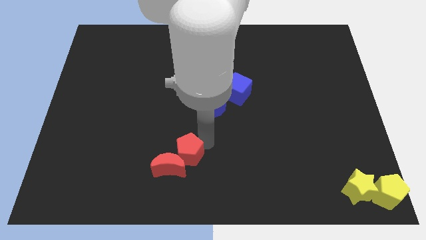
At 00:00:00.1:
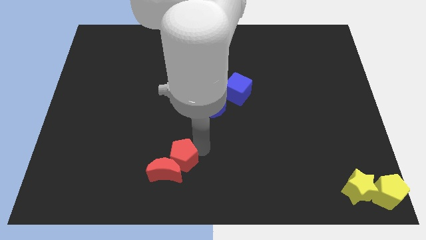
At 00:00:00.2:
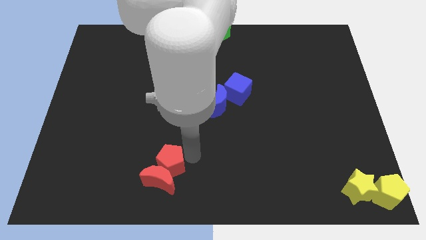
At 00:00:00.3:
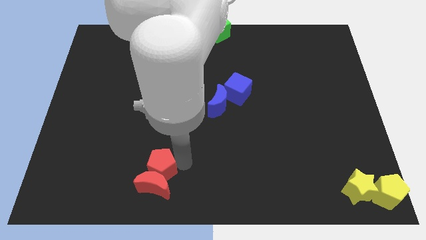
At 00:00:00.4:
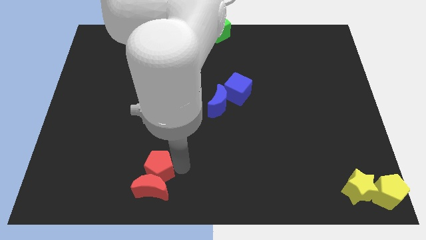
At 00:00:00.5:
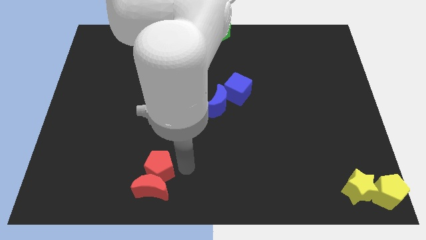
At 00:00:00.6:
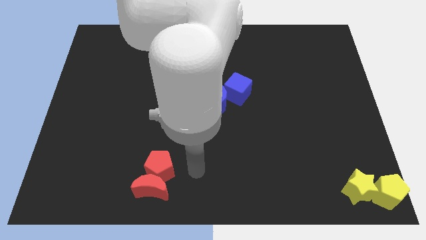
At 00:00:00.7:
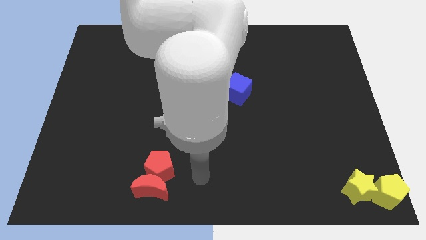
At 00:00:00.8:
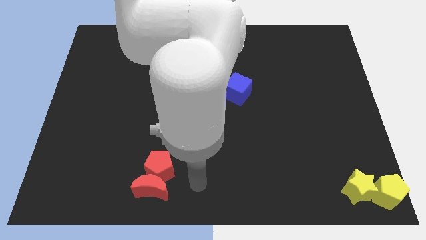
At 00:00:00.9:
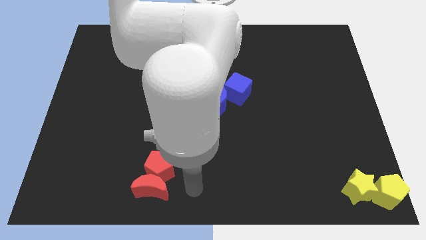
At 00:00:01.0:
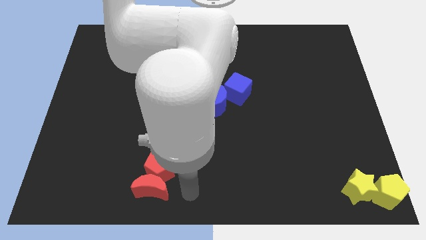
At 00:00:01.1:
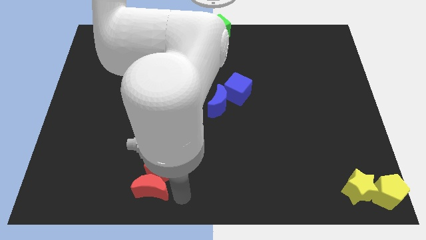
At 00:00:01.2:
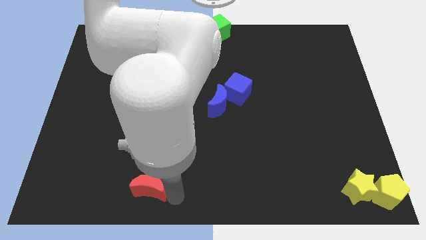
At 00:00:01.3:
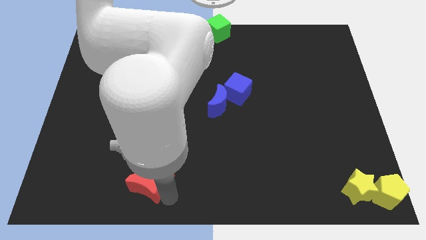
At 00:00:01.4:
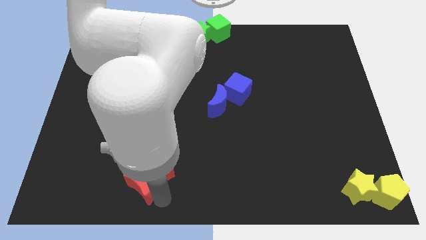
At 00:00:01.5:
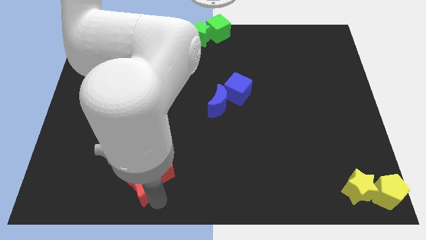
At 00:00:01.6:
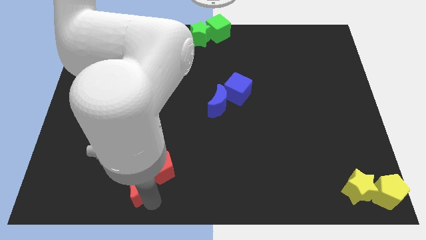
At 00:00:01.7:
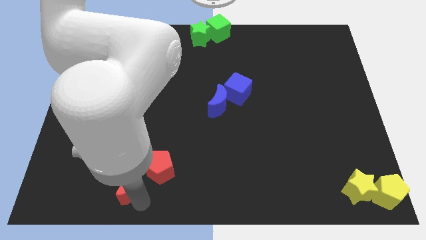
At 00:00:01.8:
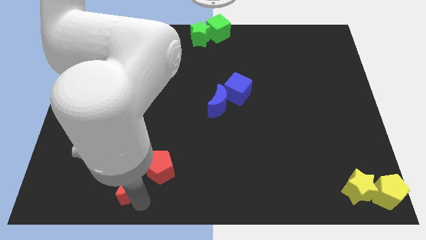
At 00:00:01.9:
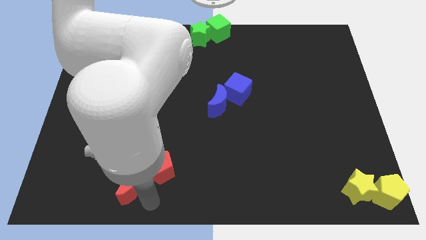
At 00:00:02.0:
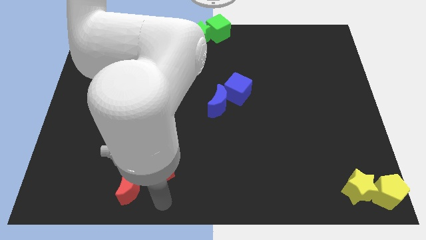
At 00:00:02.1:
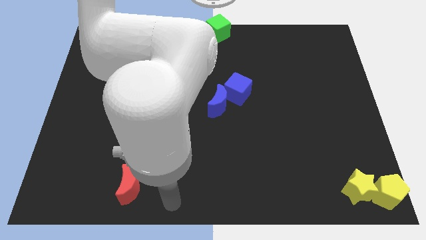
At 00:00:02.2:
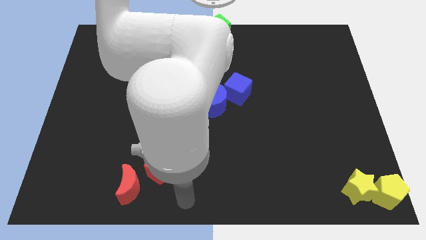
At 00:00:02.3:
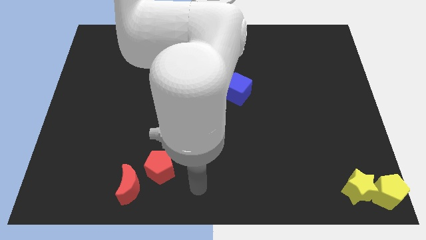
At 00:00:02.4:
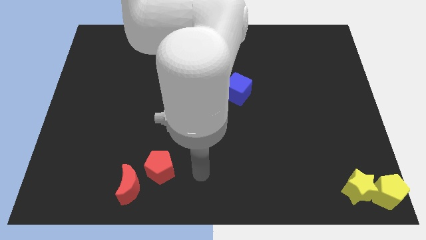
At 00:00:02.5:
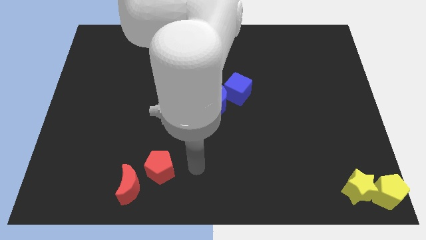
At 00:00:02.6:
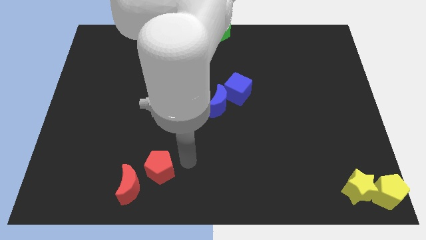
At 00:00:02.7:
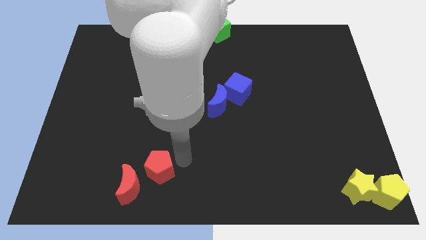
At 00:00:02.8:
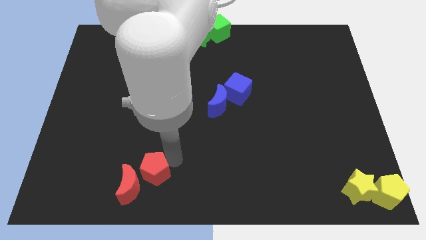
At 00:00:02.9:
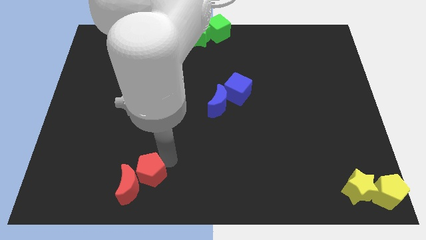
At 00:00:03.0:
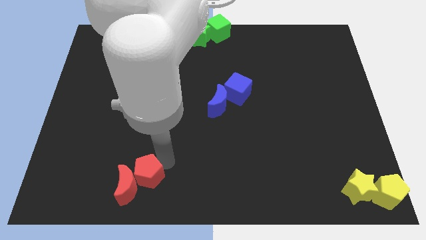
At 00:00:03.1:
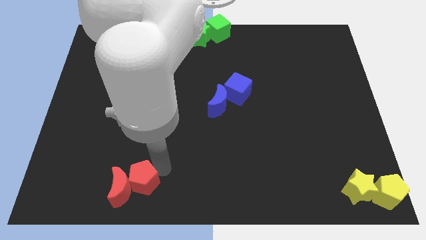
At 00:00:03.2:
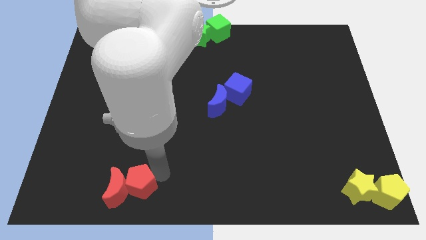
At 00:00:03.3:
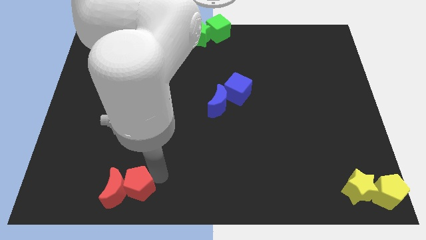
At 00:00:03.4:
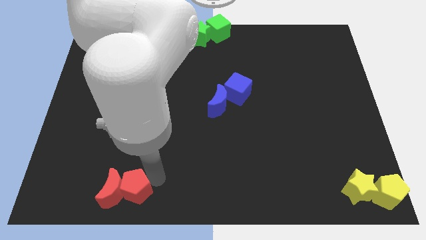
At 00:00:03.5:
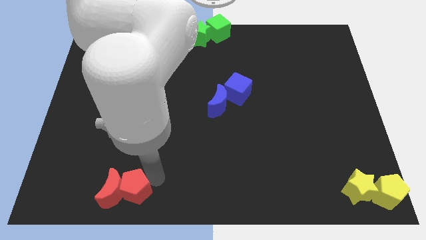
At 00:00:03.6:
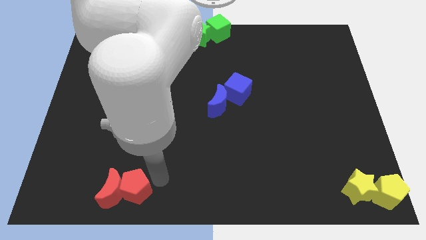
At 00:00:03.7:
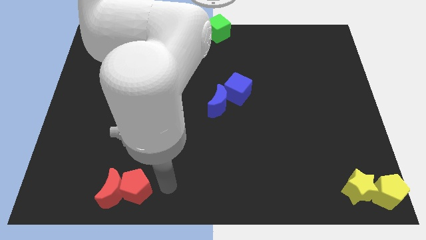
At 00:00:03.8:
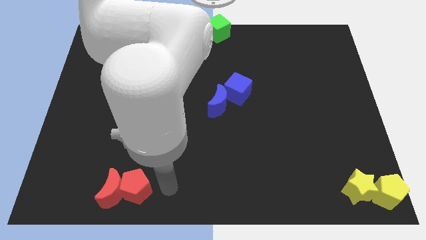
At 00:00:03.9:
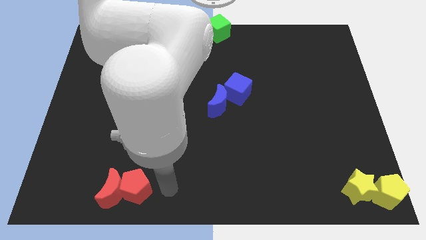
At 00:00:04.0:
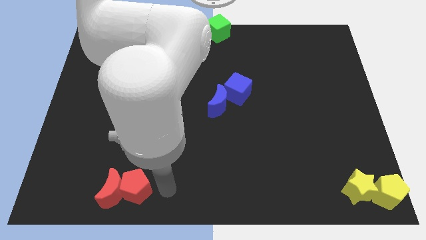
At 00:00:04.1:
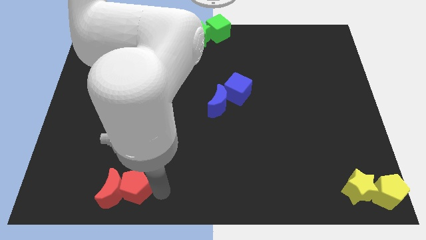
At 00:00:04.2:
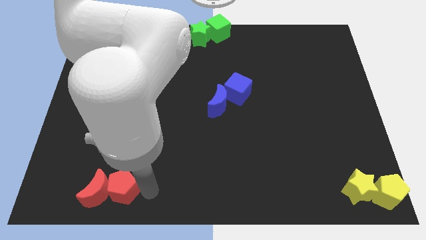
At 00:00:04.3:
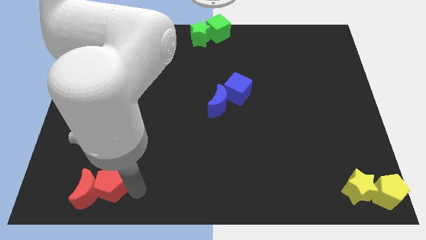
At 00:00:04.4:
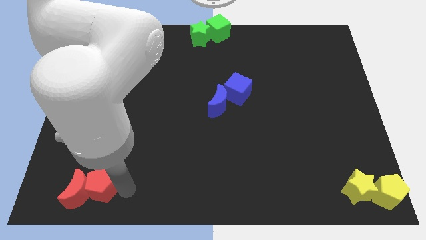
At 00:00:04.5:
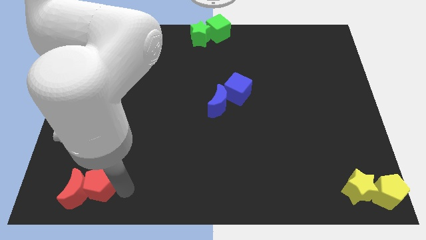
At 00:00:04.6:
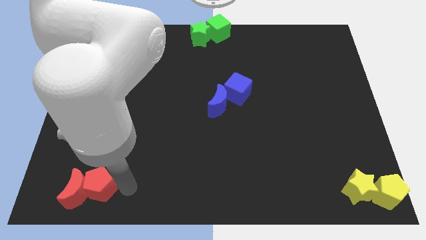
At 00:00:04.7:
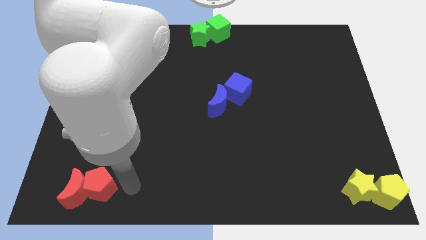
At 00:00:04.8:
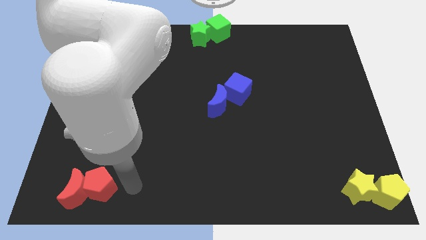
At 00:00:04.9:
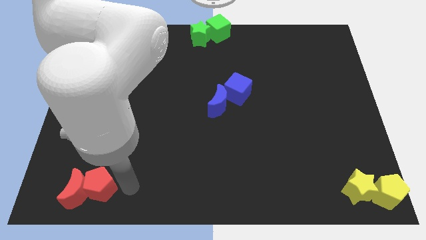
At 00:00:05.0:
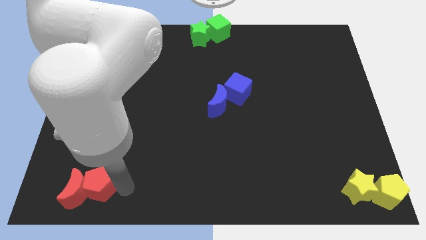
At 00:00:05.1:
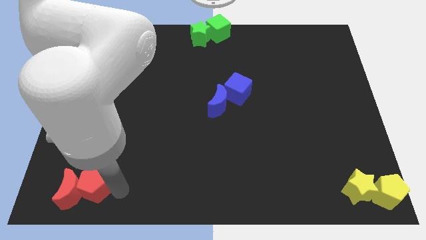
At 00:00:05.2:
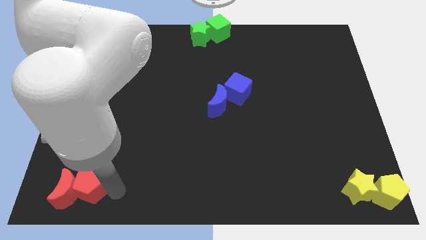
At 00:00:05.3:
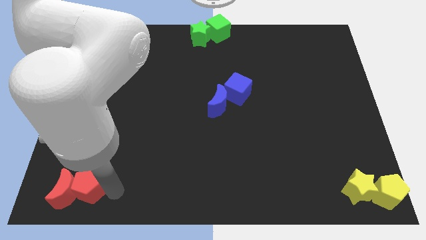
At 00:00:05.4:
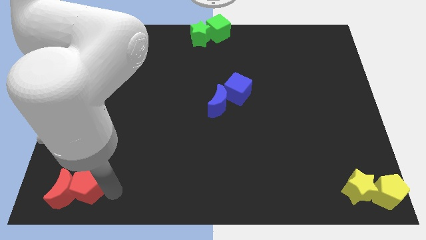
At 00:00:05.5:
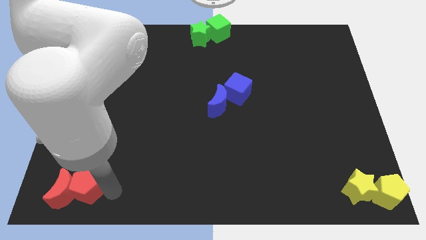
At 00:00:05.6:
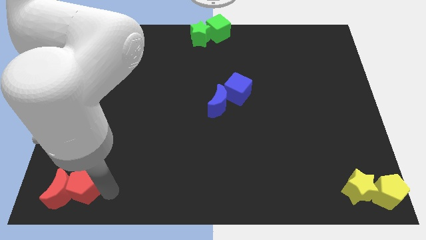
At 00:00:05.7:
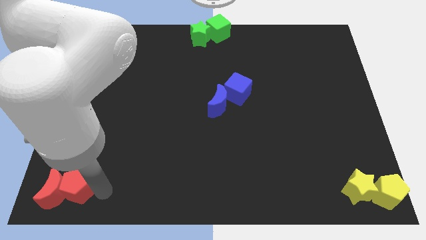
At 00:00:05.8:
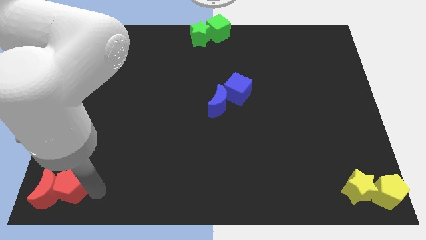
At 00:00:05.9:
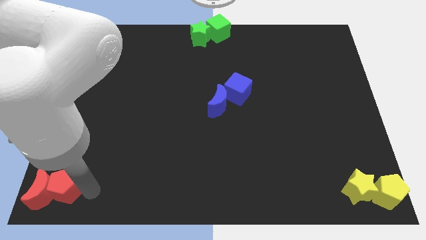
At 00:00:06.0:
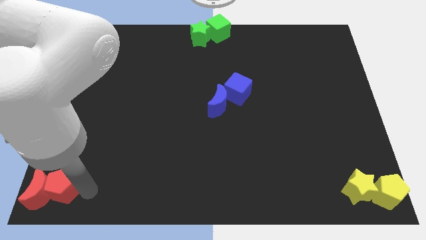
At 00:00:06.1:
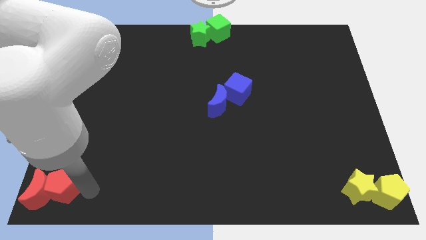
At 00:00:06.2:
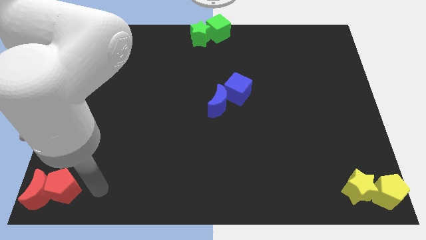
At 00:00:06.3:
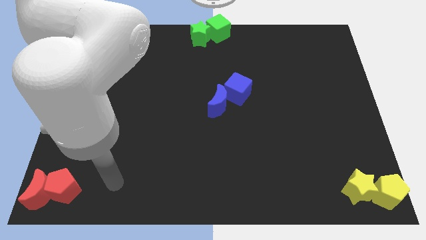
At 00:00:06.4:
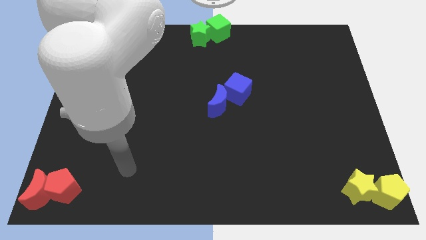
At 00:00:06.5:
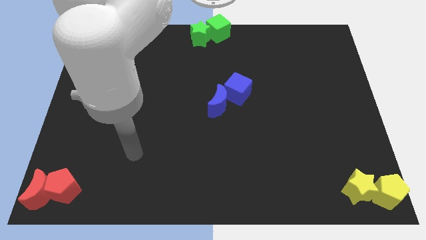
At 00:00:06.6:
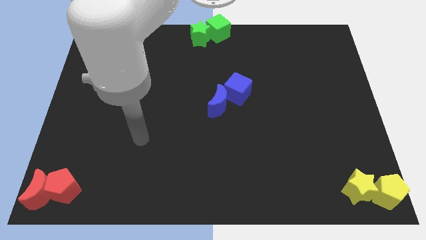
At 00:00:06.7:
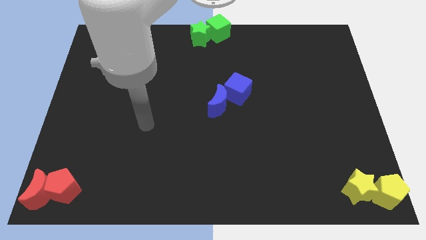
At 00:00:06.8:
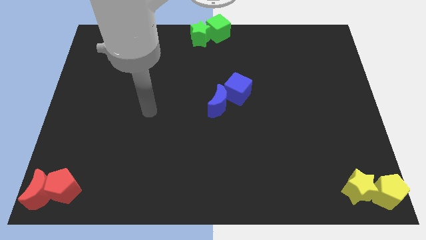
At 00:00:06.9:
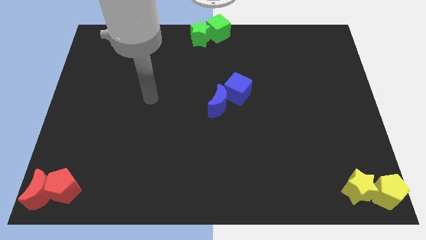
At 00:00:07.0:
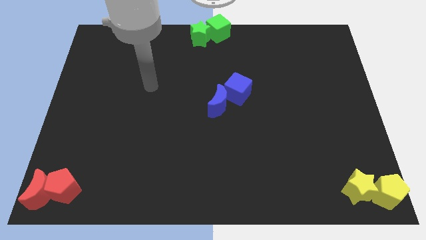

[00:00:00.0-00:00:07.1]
place the red blocks at the bottom left corner

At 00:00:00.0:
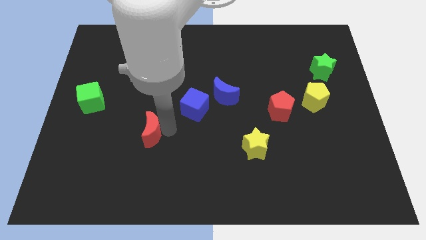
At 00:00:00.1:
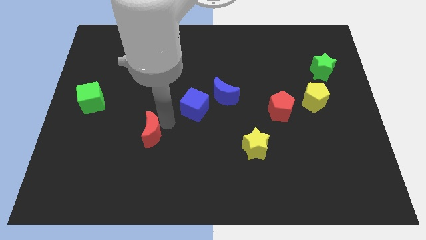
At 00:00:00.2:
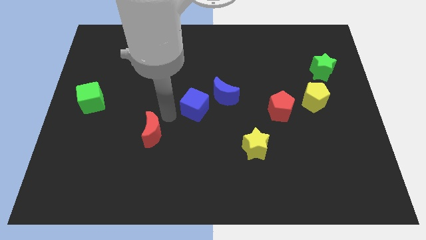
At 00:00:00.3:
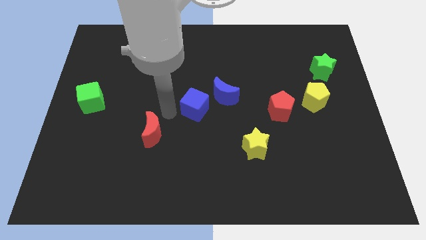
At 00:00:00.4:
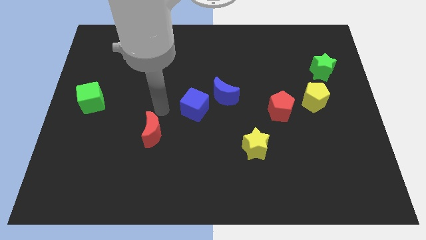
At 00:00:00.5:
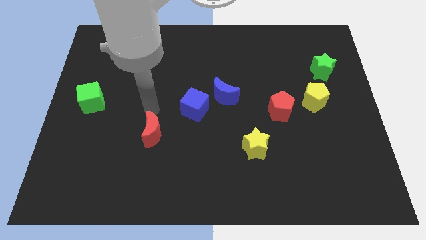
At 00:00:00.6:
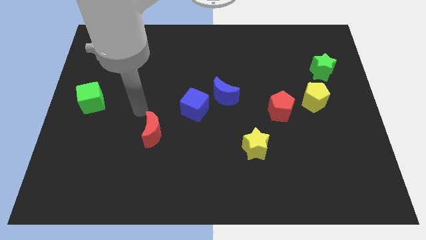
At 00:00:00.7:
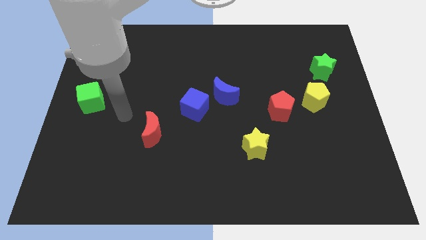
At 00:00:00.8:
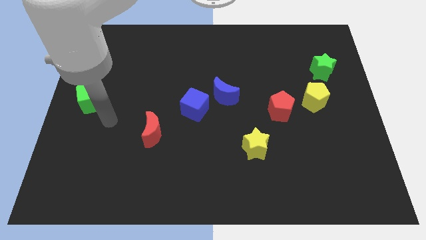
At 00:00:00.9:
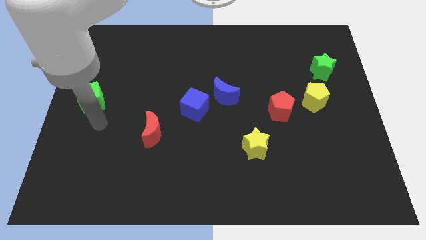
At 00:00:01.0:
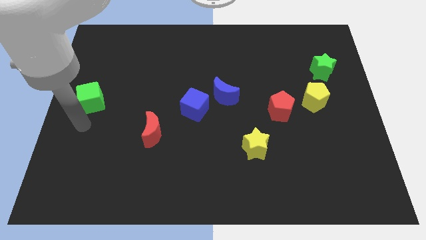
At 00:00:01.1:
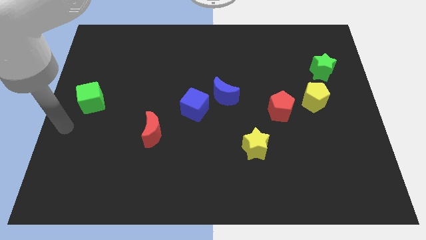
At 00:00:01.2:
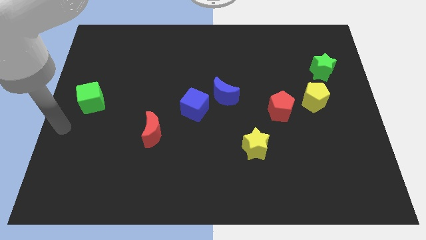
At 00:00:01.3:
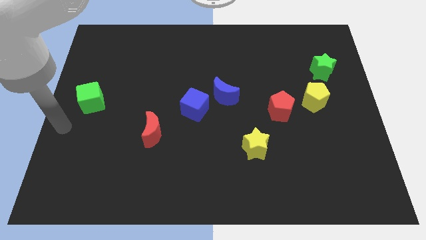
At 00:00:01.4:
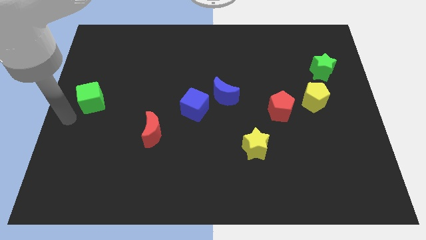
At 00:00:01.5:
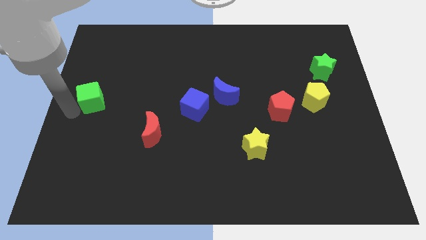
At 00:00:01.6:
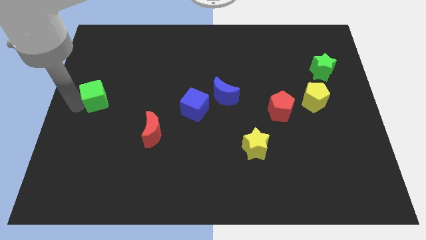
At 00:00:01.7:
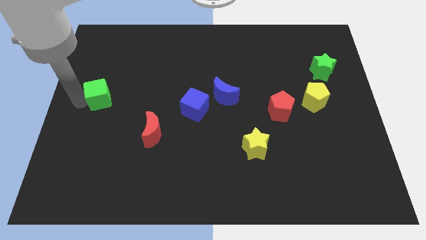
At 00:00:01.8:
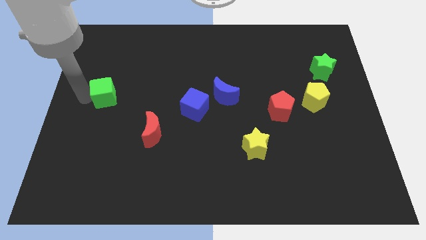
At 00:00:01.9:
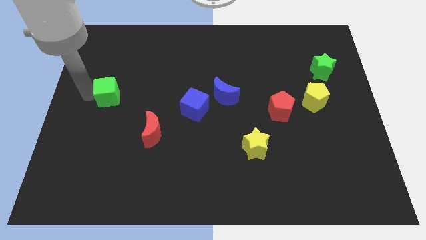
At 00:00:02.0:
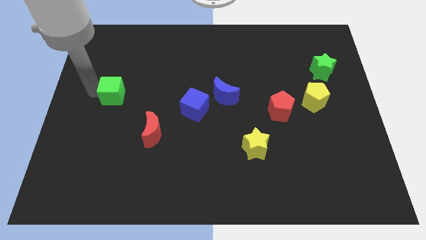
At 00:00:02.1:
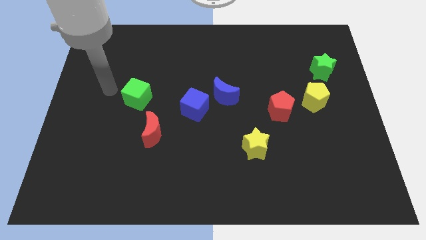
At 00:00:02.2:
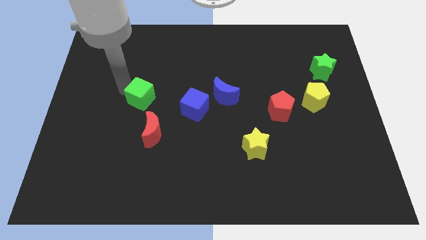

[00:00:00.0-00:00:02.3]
place the green cube above the red moon
